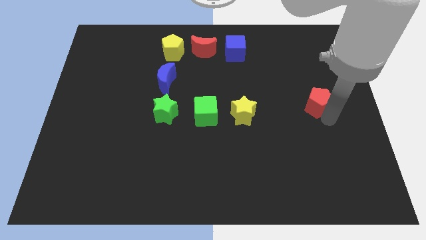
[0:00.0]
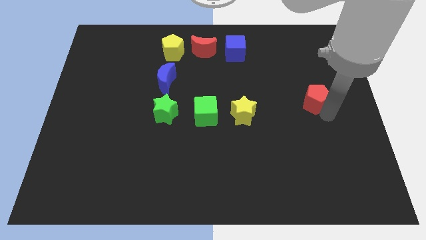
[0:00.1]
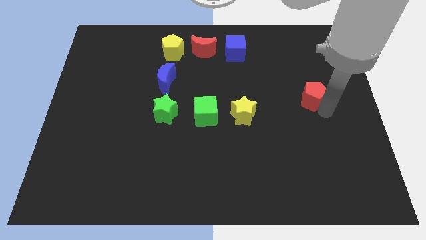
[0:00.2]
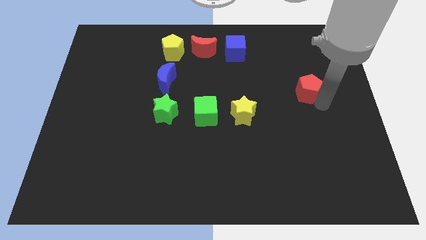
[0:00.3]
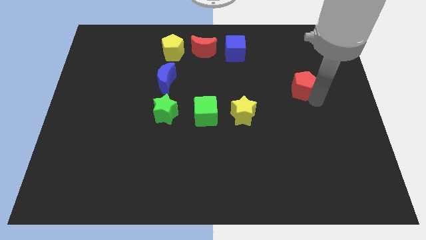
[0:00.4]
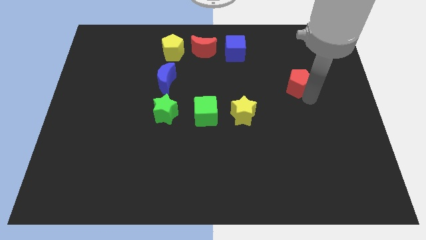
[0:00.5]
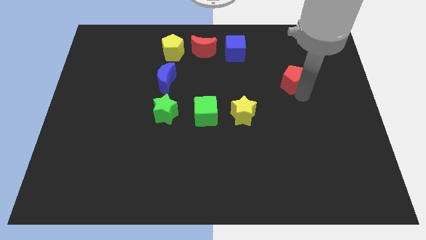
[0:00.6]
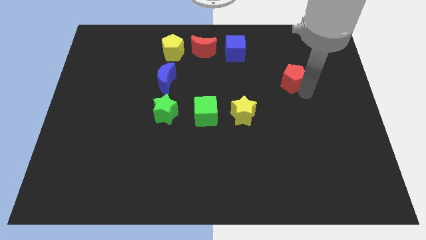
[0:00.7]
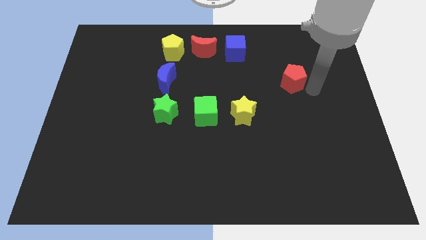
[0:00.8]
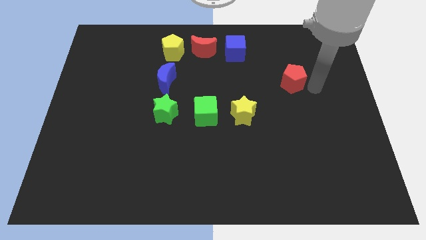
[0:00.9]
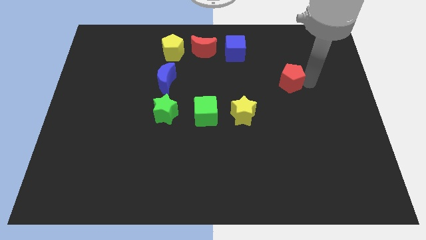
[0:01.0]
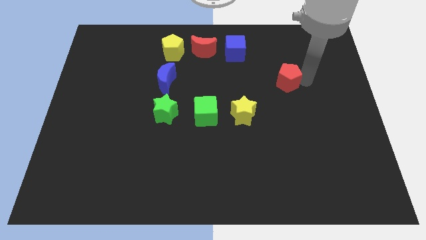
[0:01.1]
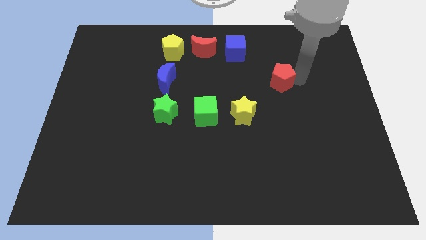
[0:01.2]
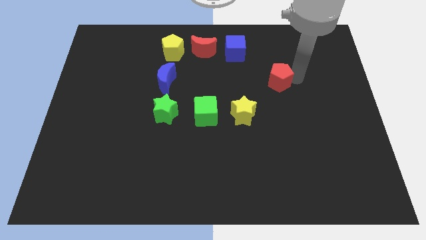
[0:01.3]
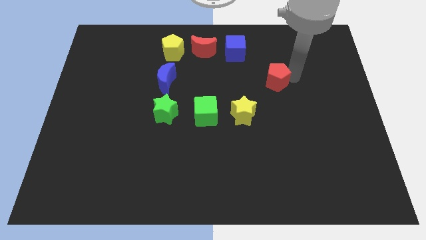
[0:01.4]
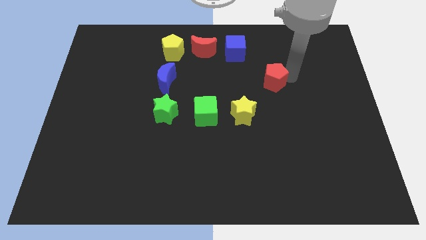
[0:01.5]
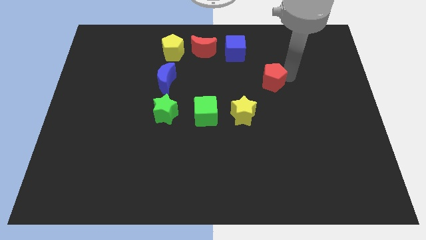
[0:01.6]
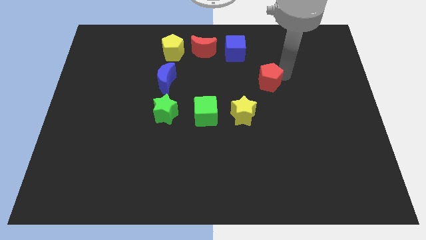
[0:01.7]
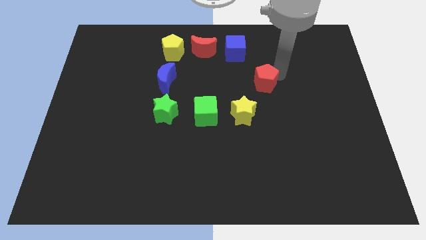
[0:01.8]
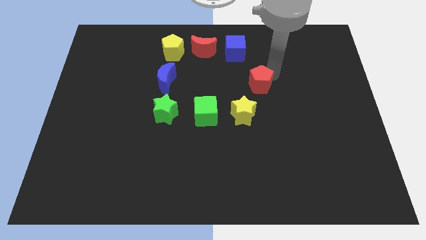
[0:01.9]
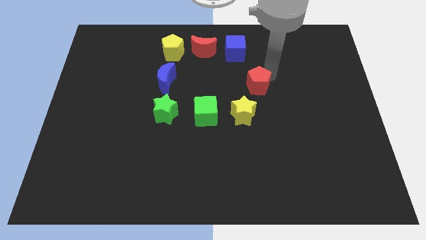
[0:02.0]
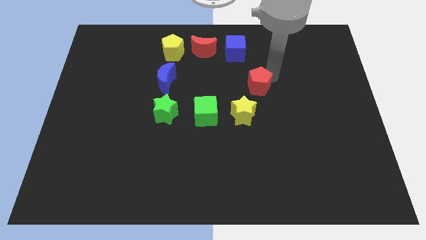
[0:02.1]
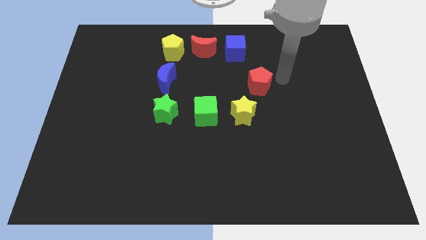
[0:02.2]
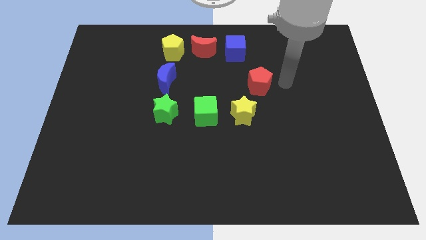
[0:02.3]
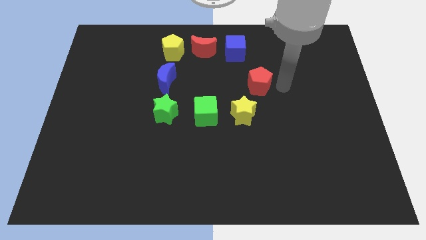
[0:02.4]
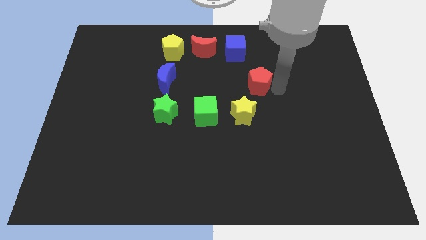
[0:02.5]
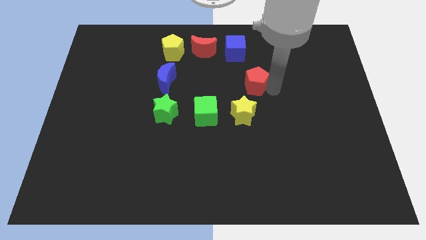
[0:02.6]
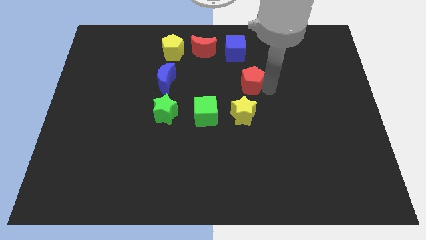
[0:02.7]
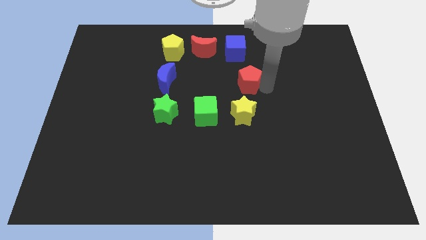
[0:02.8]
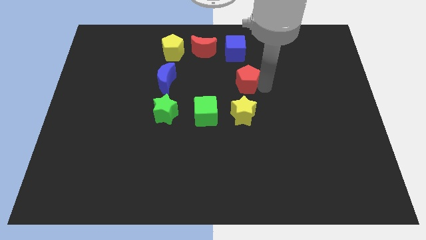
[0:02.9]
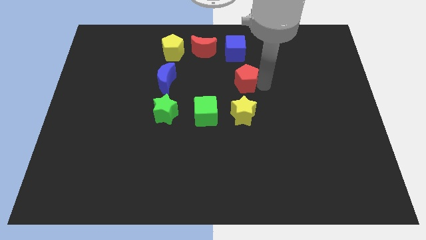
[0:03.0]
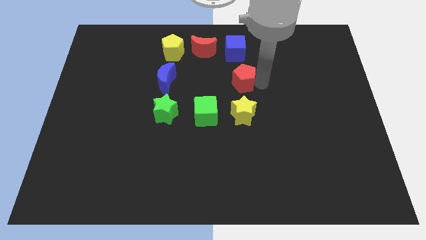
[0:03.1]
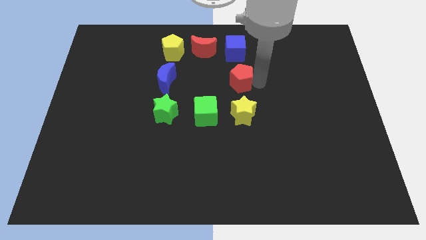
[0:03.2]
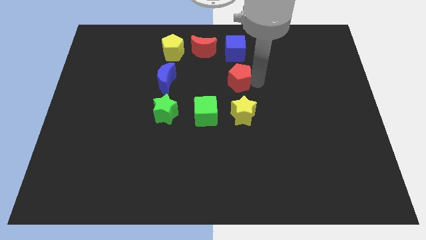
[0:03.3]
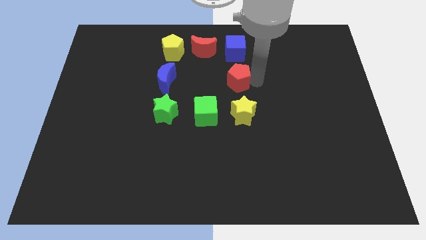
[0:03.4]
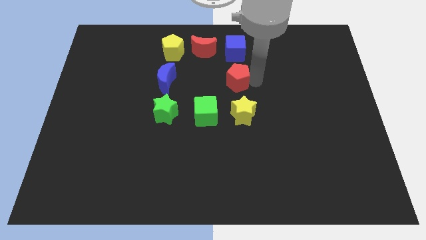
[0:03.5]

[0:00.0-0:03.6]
push the red pentagon to the top right of the green cube

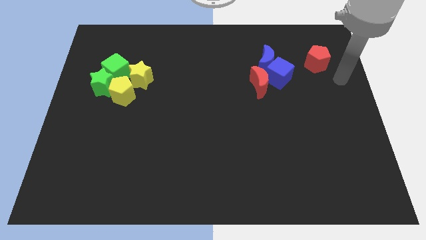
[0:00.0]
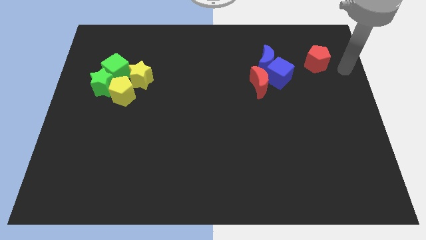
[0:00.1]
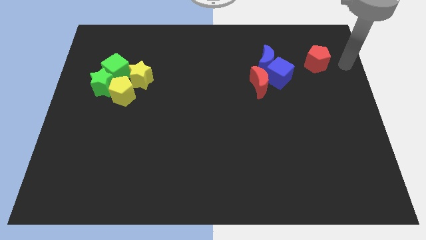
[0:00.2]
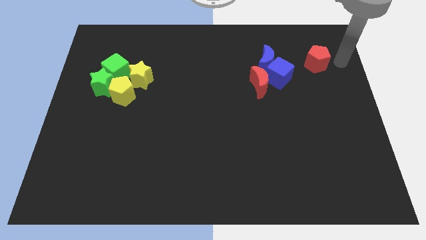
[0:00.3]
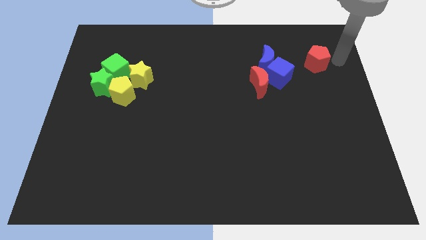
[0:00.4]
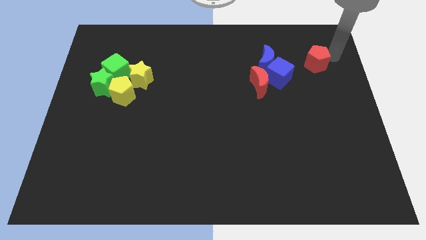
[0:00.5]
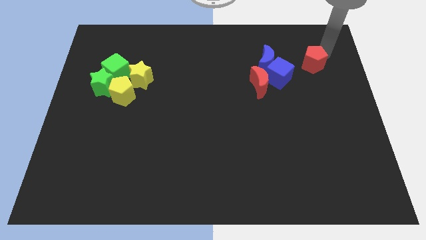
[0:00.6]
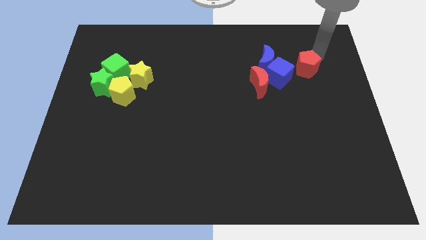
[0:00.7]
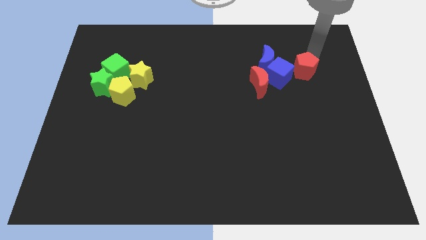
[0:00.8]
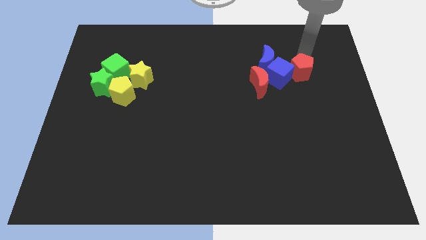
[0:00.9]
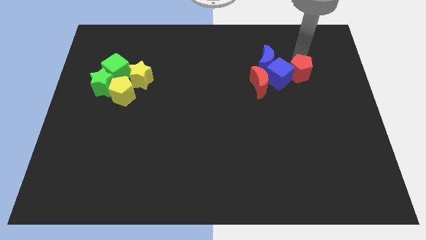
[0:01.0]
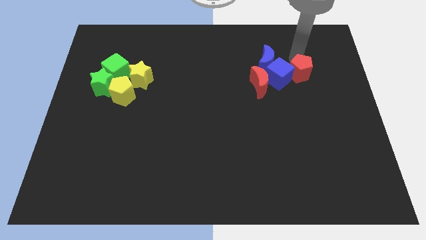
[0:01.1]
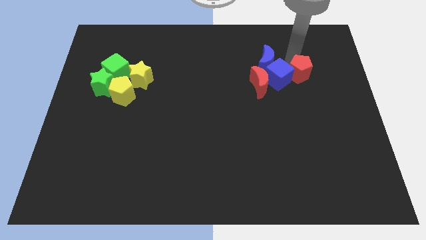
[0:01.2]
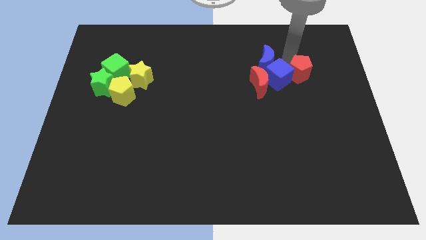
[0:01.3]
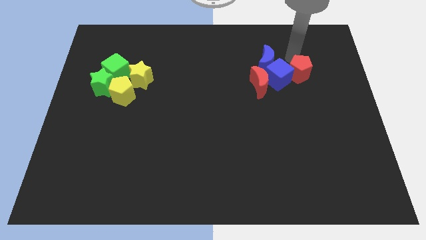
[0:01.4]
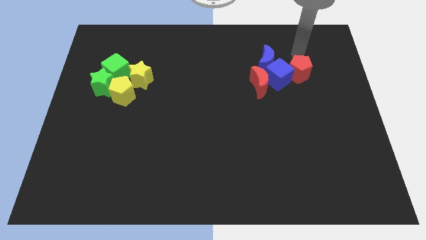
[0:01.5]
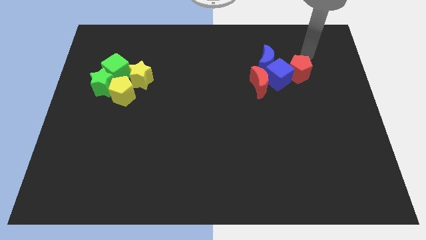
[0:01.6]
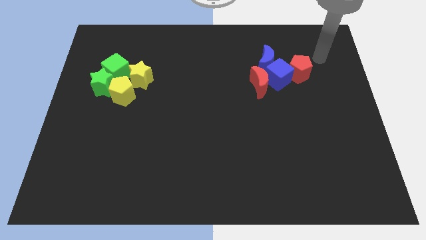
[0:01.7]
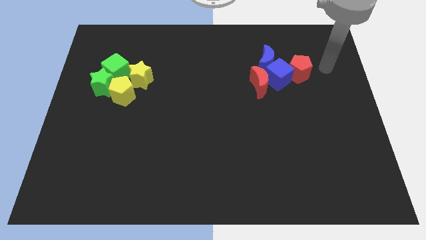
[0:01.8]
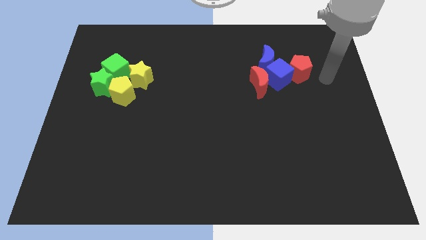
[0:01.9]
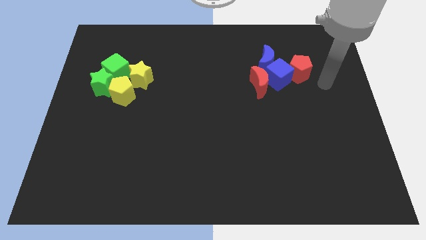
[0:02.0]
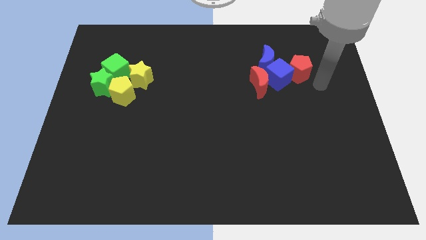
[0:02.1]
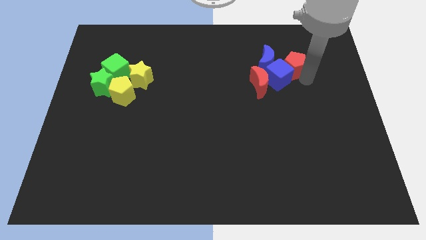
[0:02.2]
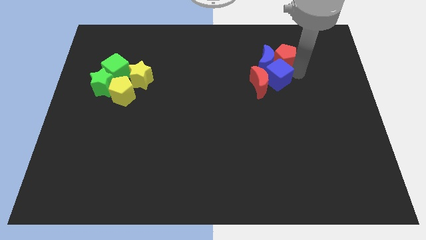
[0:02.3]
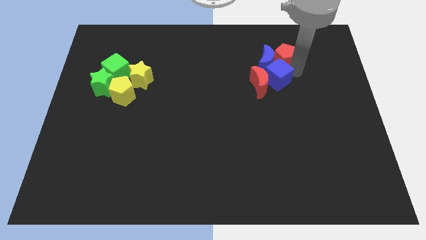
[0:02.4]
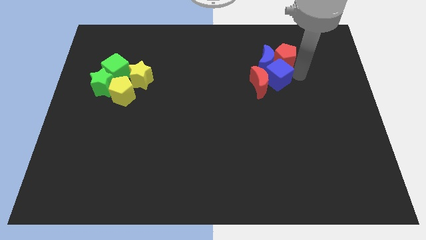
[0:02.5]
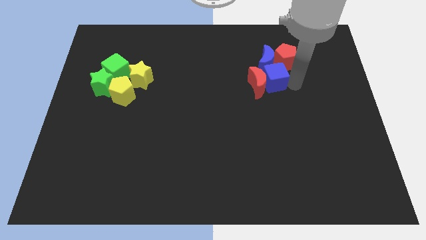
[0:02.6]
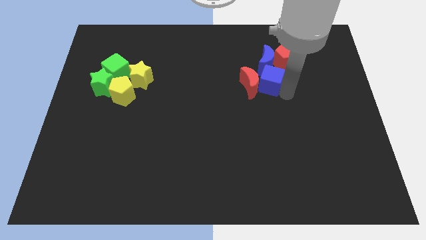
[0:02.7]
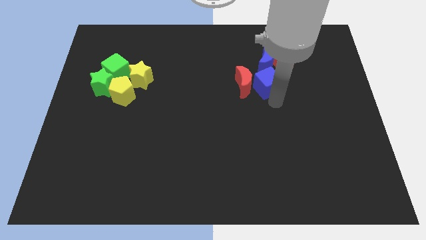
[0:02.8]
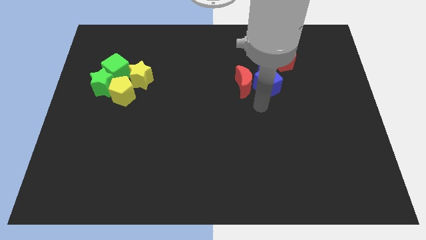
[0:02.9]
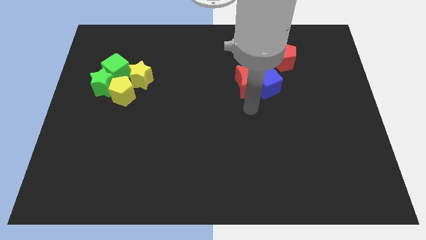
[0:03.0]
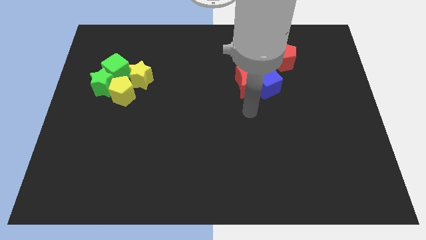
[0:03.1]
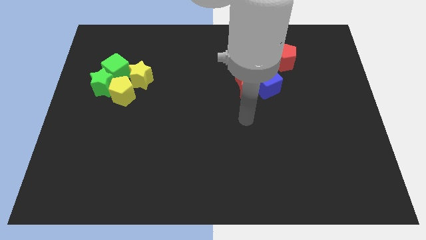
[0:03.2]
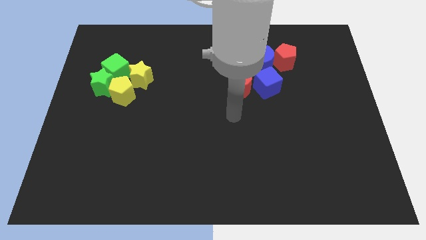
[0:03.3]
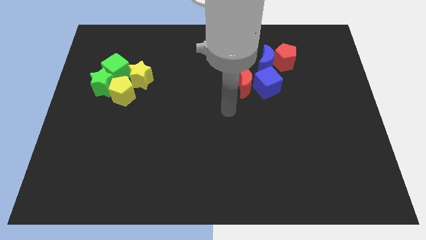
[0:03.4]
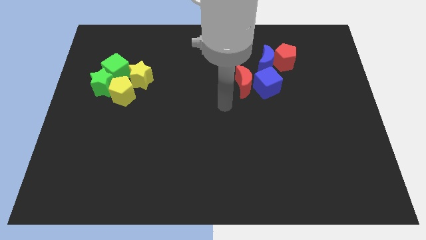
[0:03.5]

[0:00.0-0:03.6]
move the red pentagon into the blue crescent

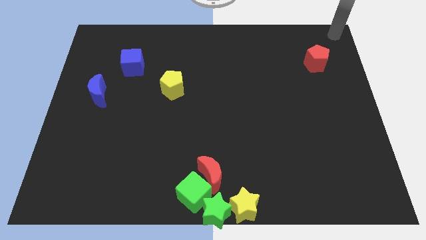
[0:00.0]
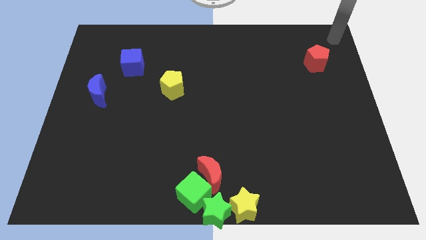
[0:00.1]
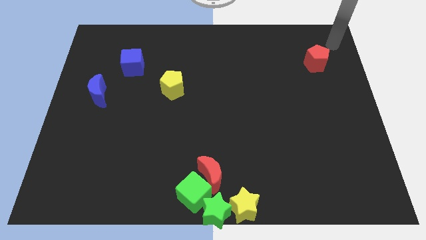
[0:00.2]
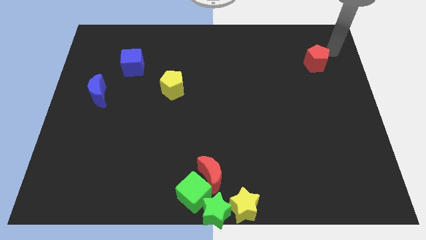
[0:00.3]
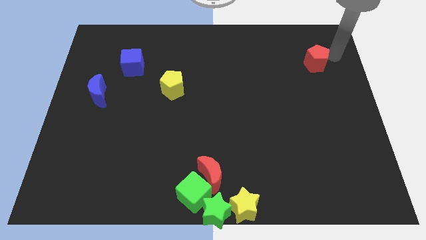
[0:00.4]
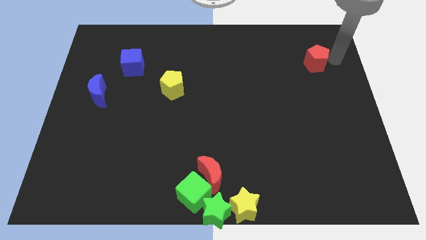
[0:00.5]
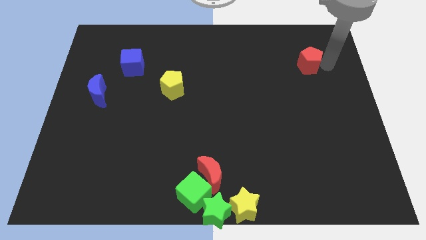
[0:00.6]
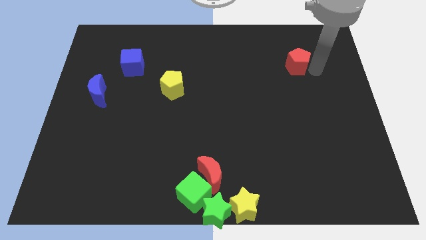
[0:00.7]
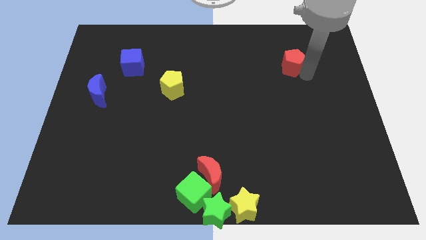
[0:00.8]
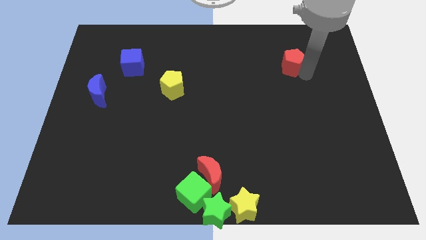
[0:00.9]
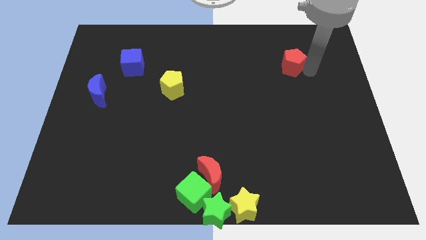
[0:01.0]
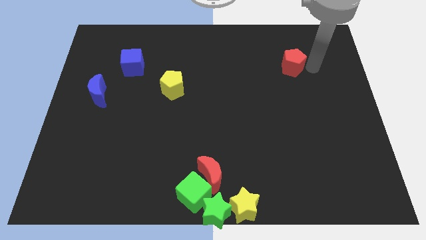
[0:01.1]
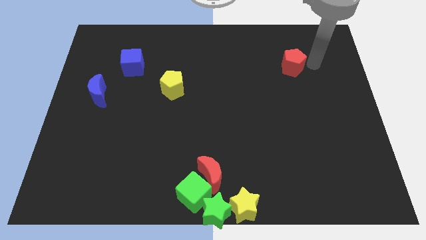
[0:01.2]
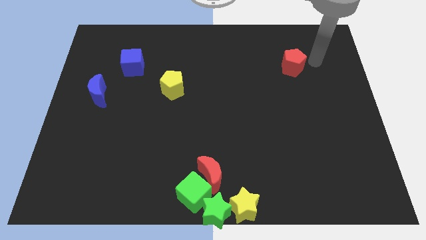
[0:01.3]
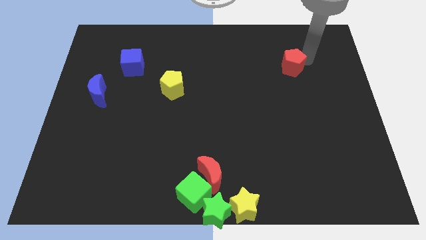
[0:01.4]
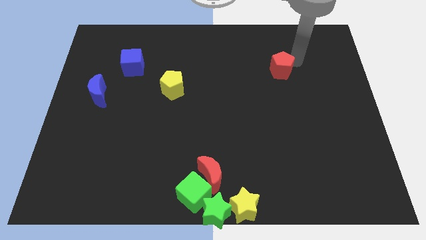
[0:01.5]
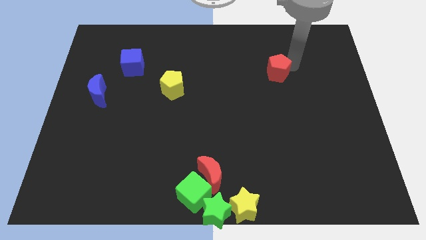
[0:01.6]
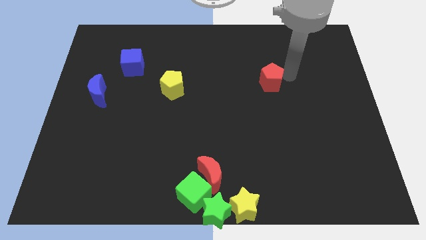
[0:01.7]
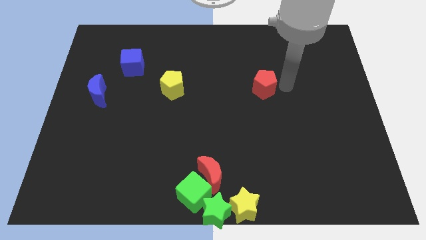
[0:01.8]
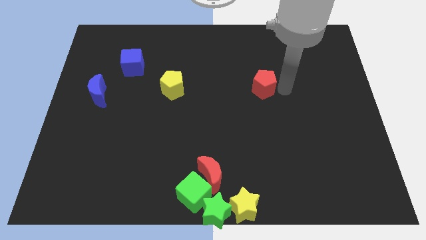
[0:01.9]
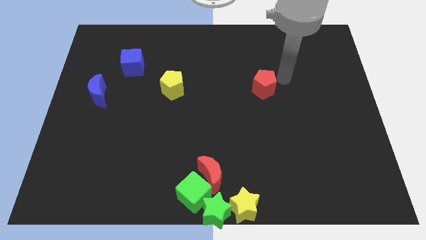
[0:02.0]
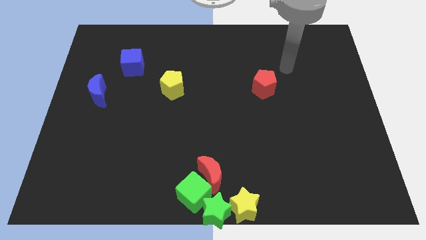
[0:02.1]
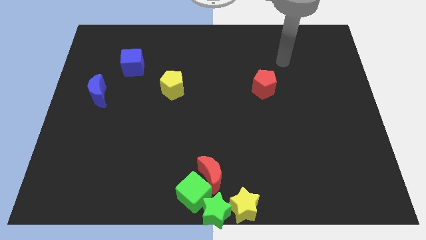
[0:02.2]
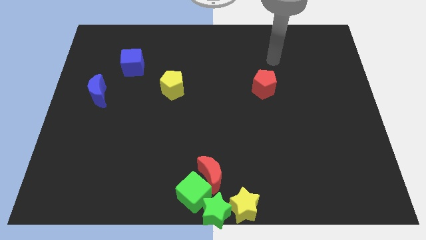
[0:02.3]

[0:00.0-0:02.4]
slide the red pentagon parallel to yellow pentagon
